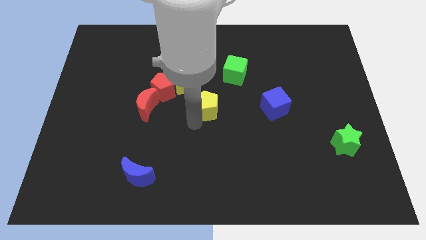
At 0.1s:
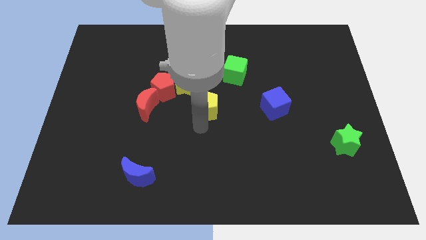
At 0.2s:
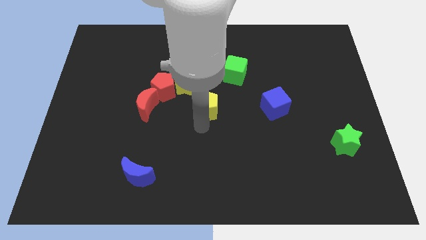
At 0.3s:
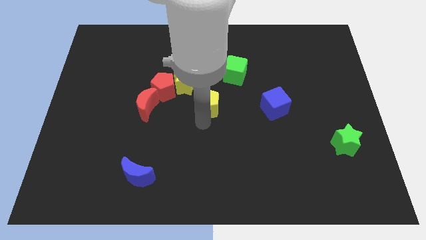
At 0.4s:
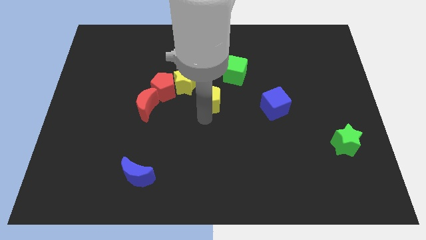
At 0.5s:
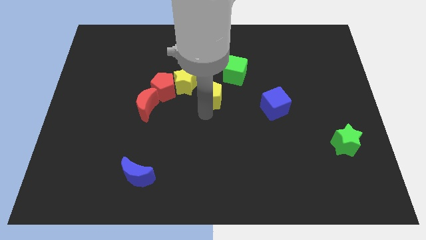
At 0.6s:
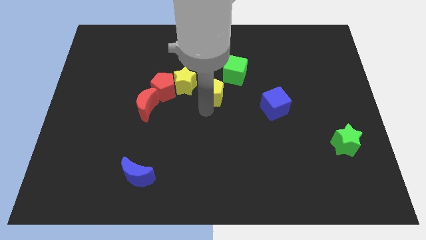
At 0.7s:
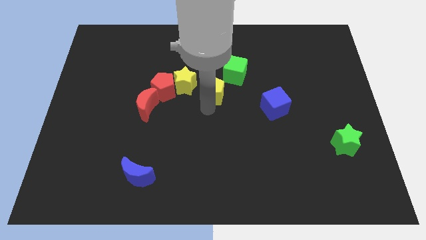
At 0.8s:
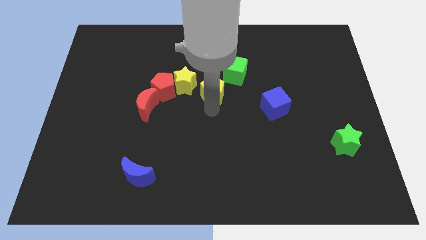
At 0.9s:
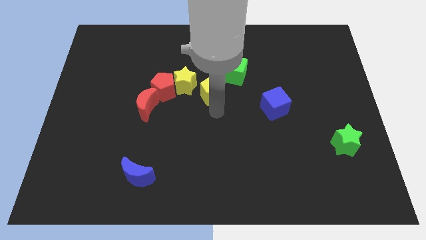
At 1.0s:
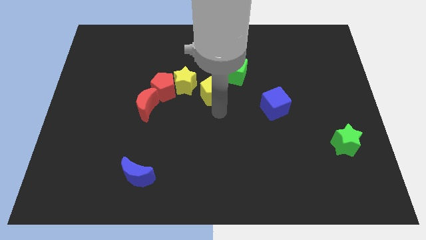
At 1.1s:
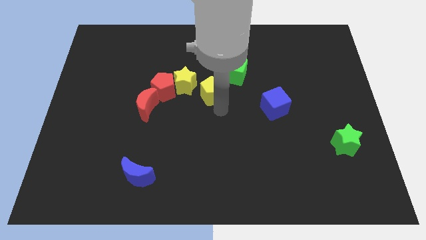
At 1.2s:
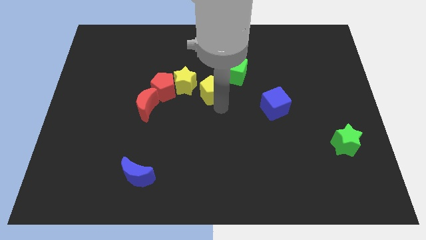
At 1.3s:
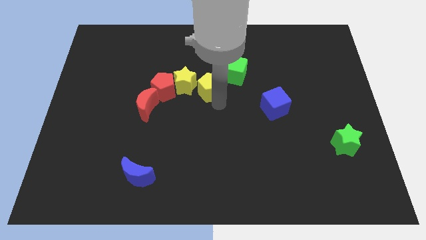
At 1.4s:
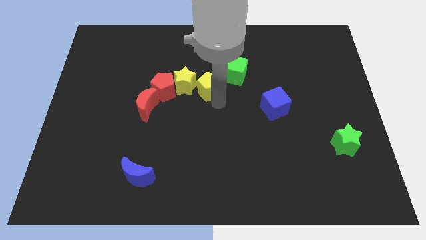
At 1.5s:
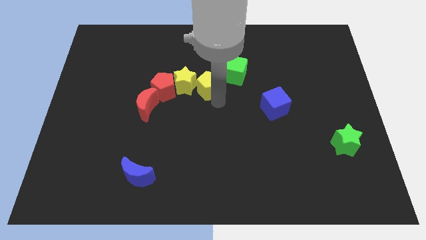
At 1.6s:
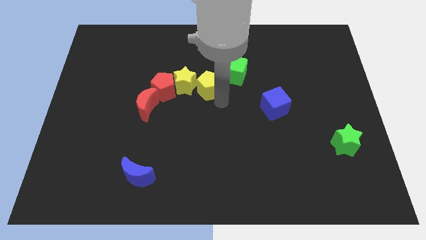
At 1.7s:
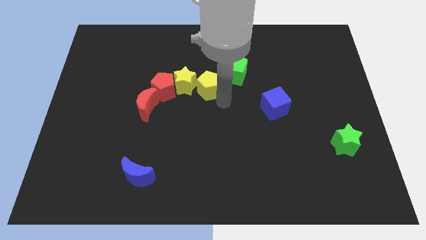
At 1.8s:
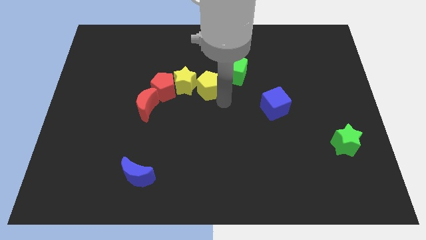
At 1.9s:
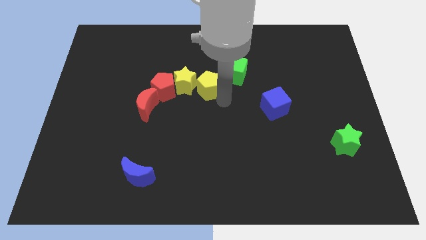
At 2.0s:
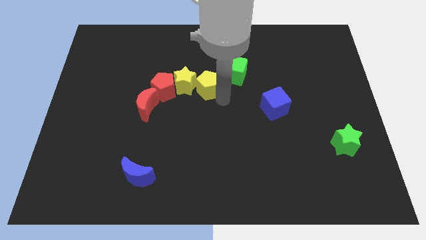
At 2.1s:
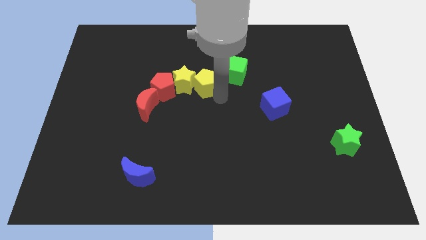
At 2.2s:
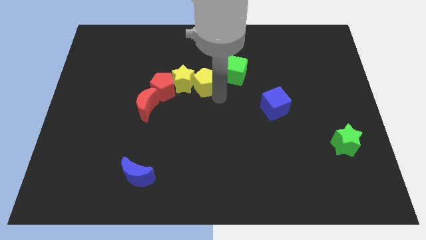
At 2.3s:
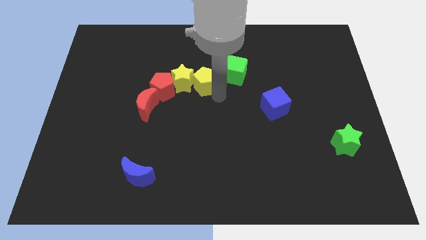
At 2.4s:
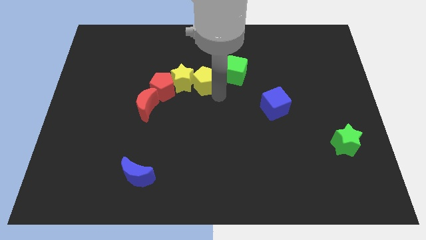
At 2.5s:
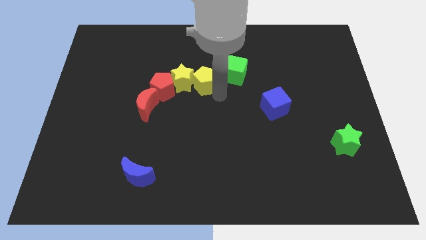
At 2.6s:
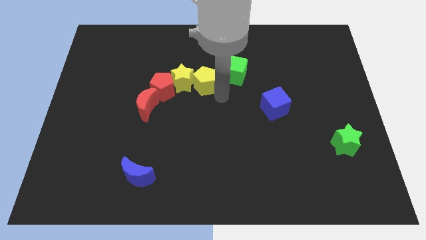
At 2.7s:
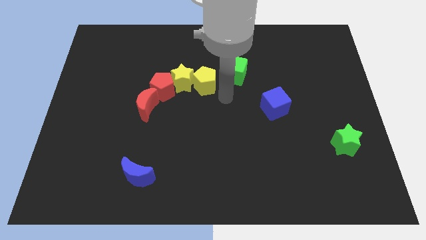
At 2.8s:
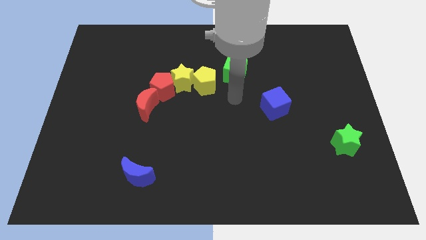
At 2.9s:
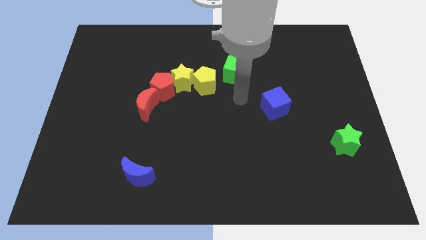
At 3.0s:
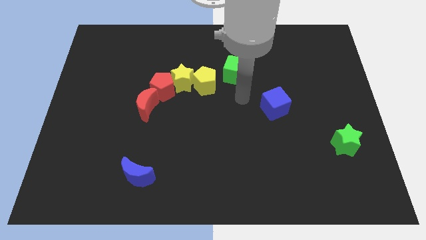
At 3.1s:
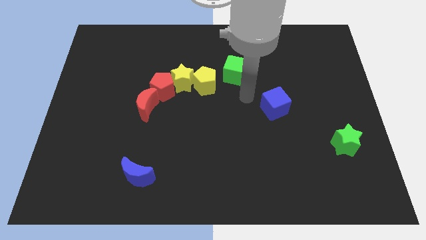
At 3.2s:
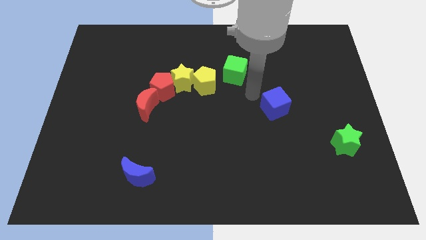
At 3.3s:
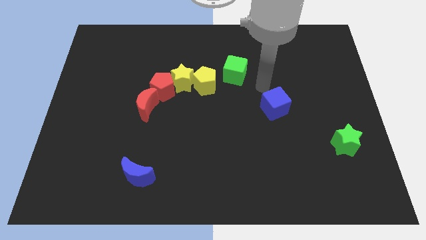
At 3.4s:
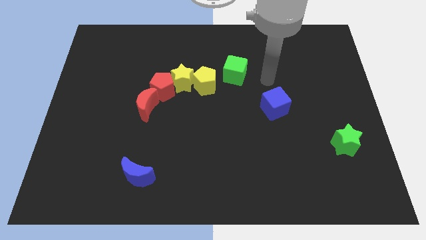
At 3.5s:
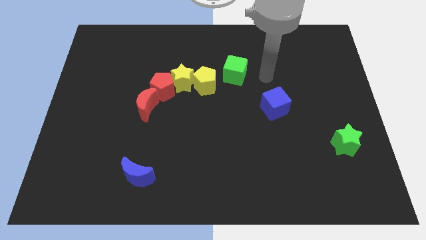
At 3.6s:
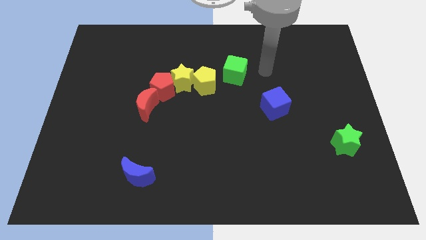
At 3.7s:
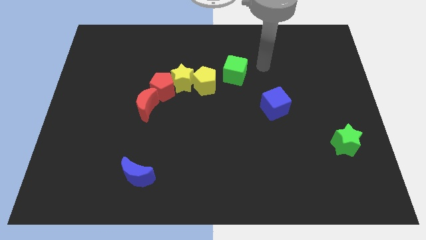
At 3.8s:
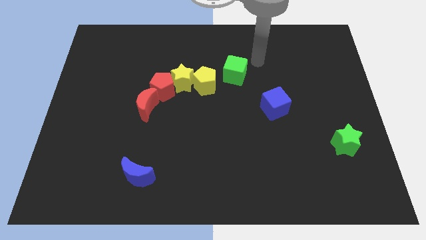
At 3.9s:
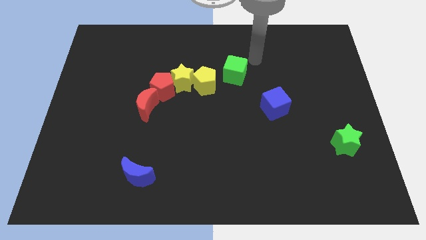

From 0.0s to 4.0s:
push the yellow pentagon in between the yellow star and green cube

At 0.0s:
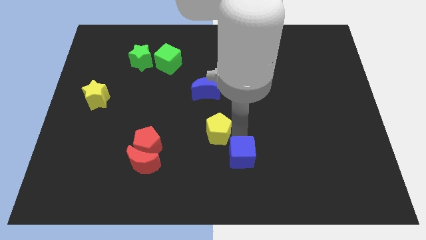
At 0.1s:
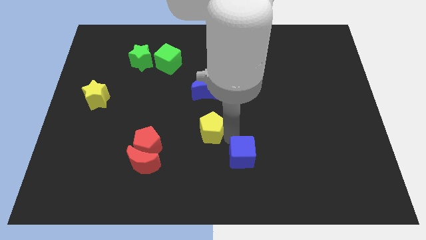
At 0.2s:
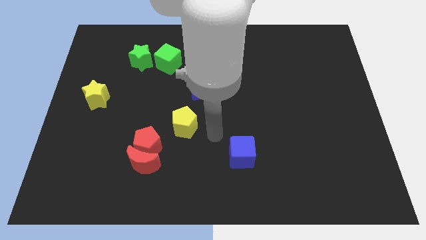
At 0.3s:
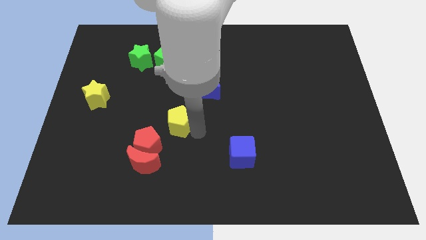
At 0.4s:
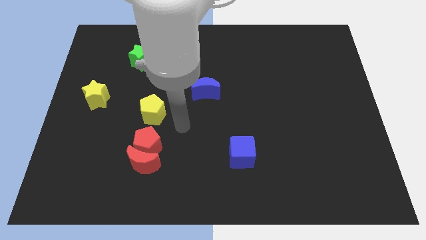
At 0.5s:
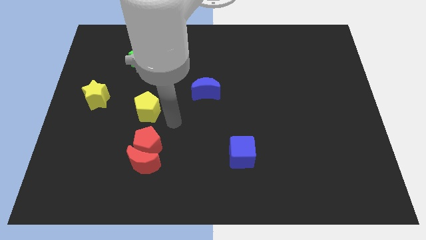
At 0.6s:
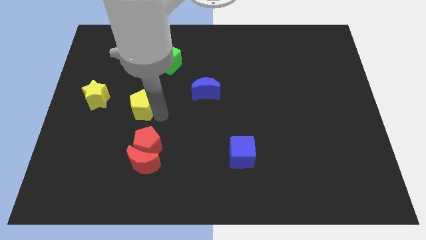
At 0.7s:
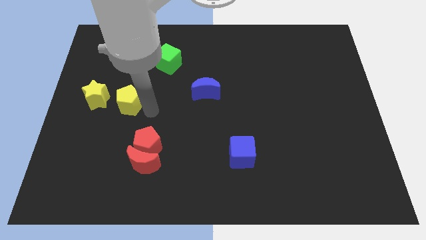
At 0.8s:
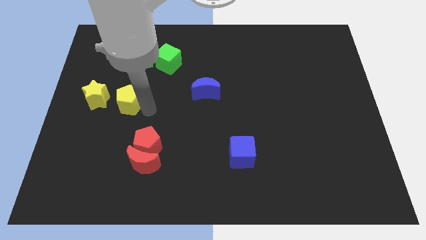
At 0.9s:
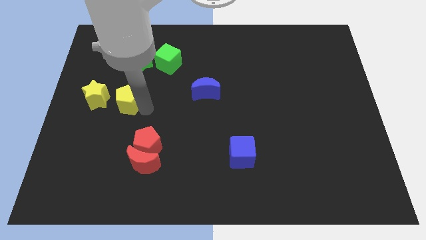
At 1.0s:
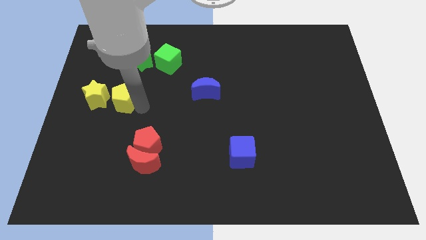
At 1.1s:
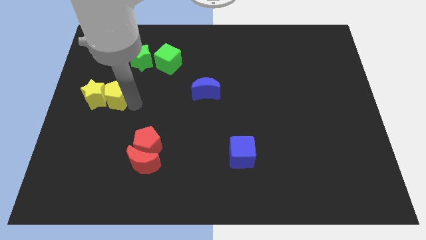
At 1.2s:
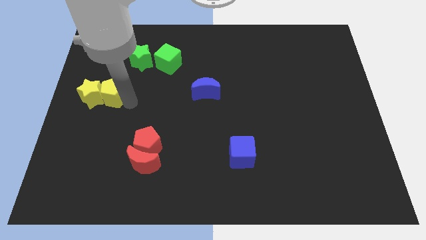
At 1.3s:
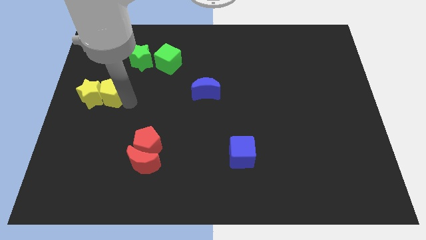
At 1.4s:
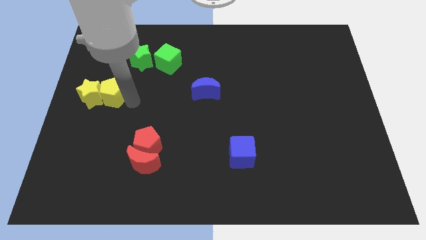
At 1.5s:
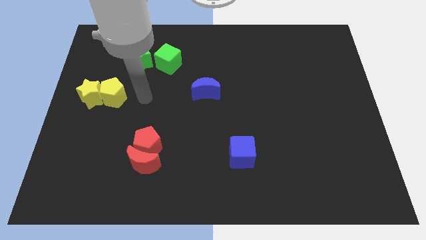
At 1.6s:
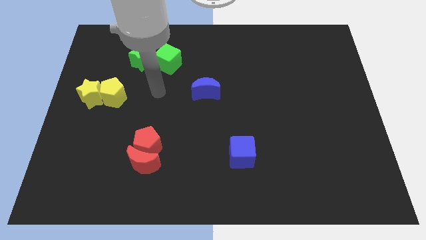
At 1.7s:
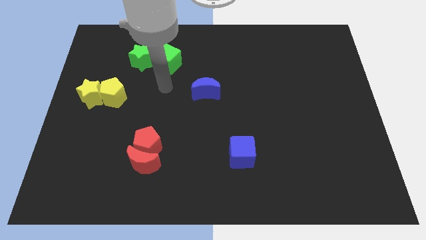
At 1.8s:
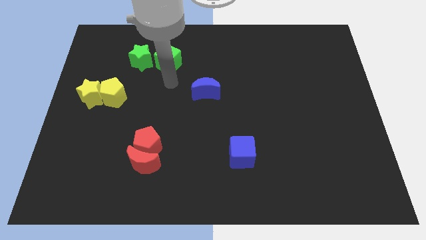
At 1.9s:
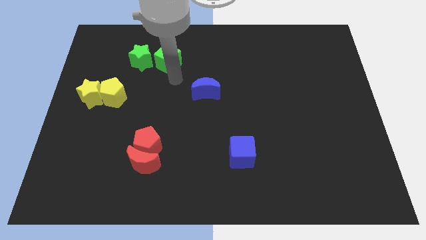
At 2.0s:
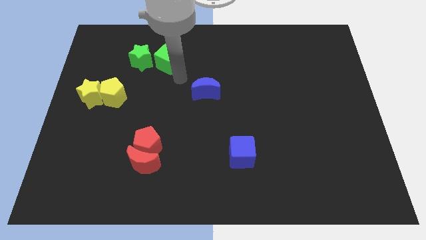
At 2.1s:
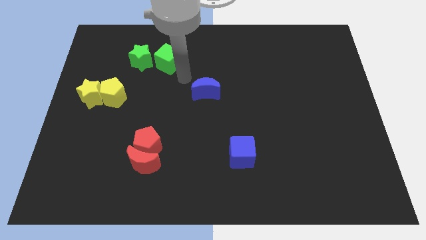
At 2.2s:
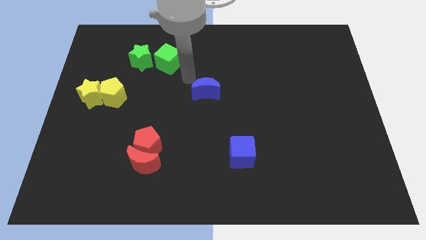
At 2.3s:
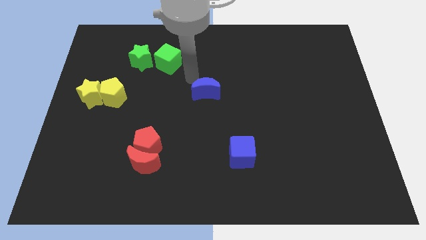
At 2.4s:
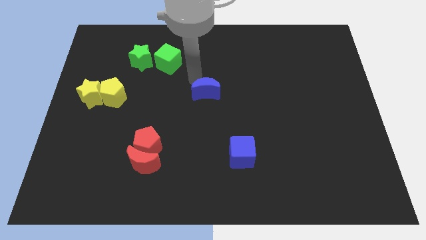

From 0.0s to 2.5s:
move your arm to the top of the blue crescent

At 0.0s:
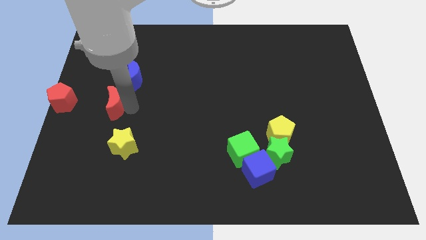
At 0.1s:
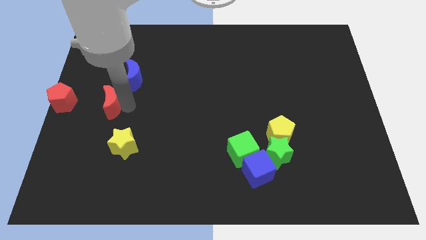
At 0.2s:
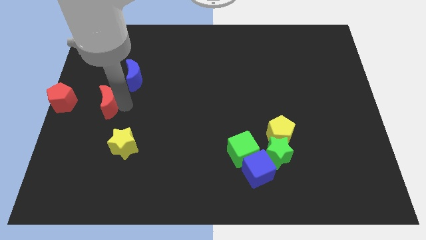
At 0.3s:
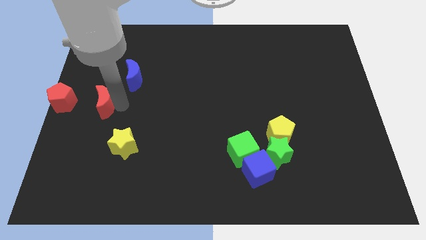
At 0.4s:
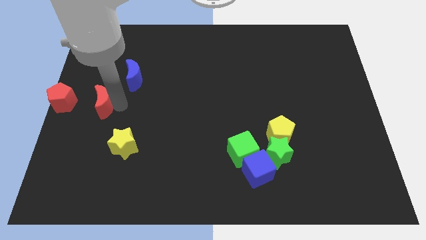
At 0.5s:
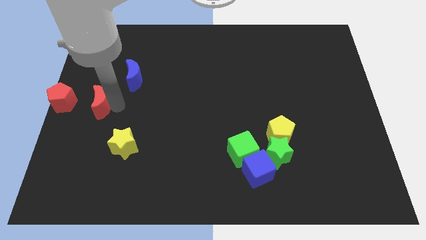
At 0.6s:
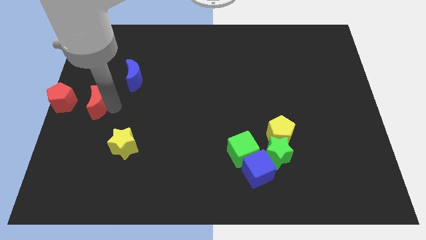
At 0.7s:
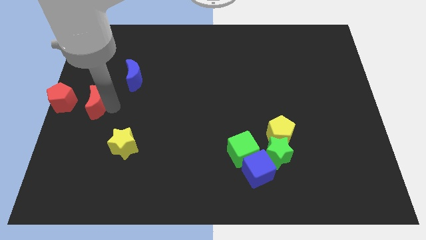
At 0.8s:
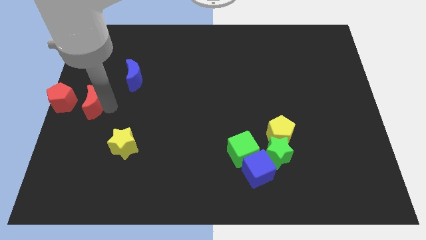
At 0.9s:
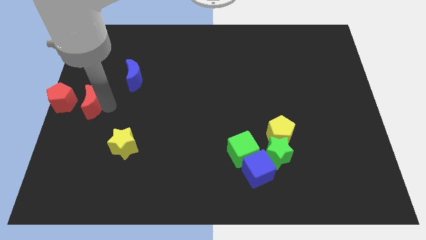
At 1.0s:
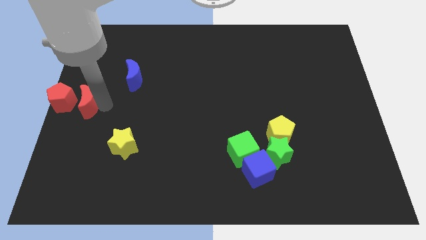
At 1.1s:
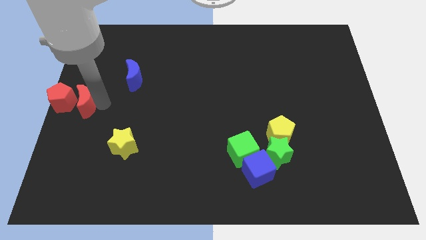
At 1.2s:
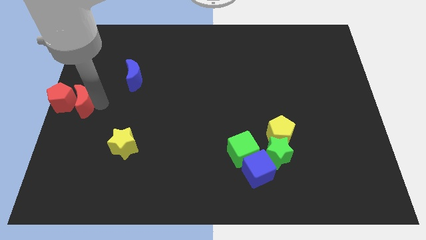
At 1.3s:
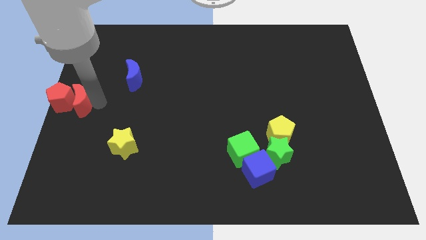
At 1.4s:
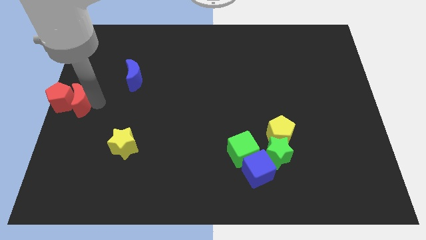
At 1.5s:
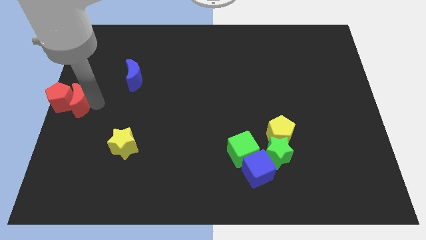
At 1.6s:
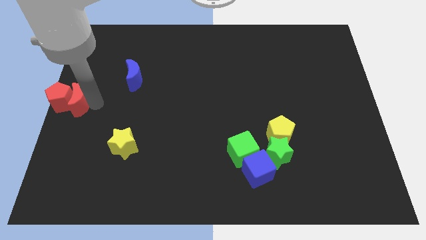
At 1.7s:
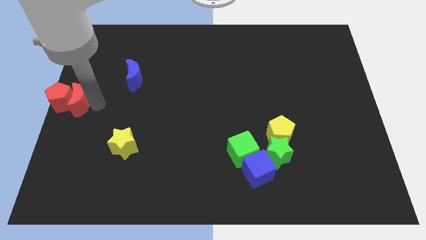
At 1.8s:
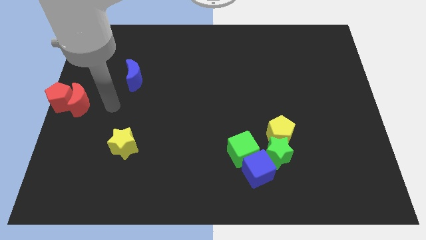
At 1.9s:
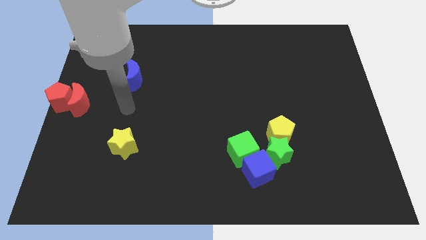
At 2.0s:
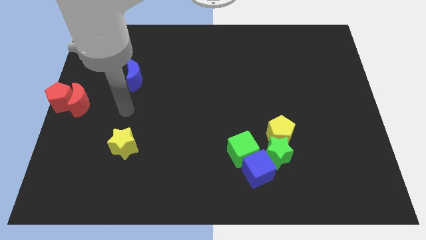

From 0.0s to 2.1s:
push the red crescent into red pentagon

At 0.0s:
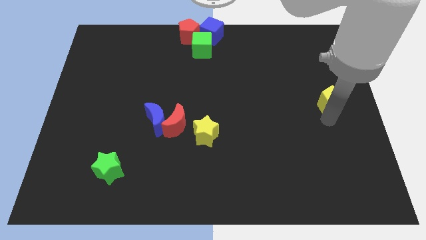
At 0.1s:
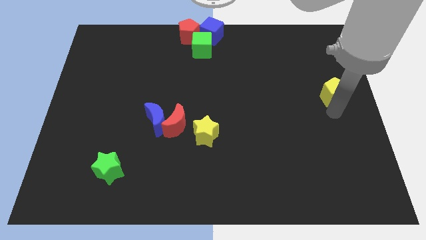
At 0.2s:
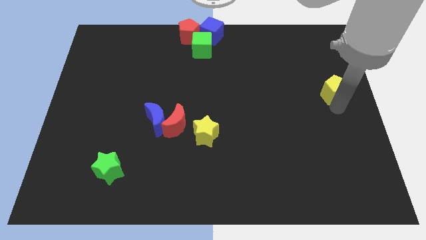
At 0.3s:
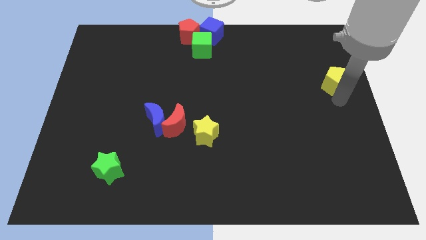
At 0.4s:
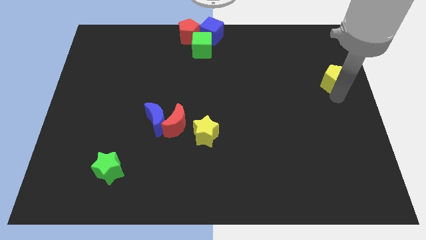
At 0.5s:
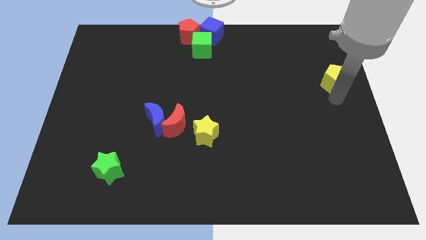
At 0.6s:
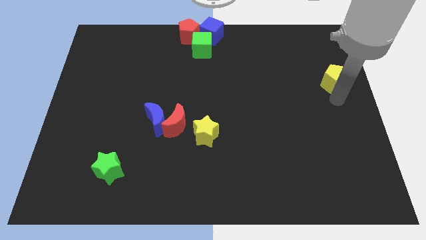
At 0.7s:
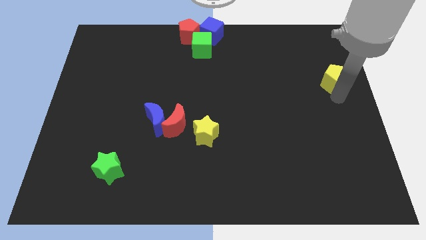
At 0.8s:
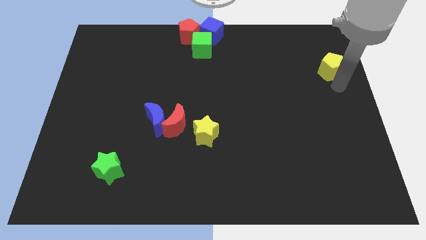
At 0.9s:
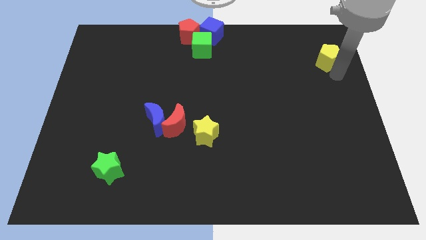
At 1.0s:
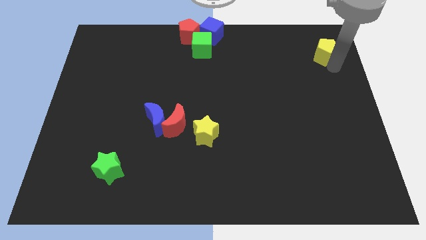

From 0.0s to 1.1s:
move yellow pentagon upwards
